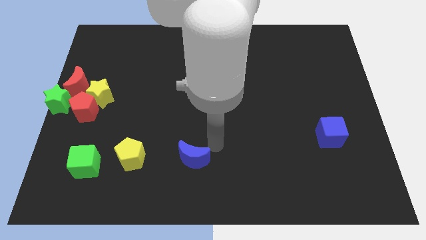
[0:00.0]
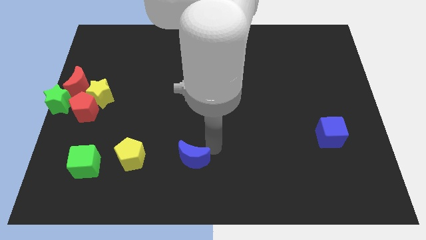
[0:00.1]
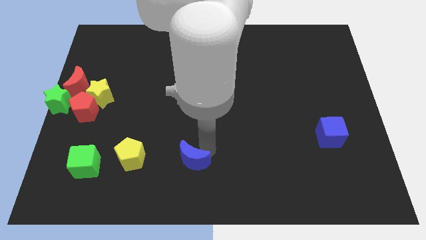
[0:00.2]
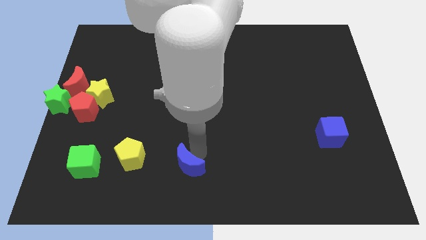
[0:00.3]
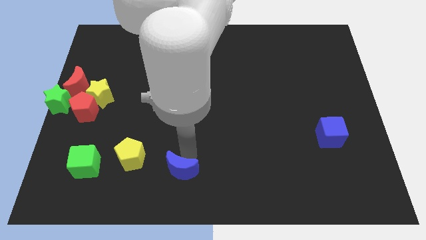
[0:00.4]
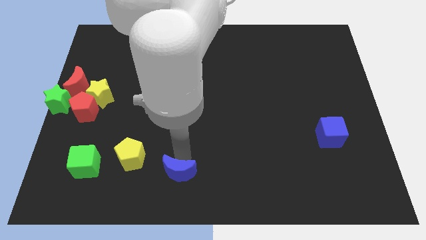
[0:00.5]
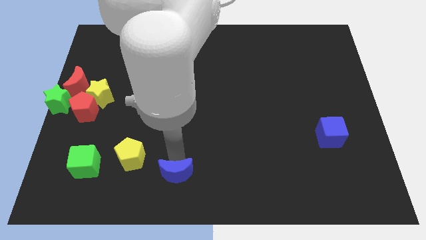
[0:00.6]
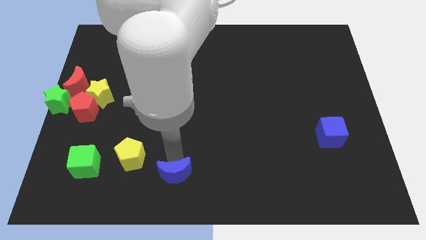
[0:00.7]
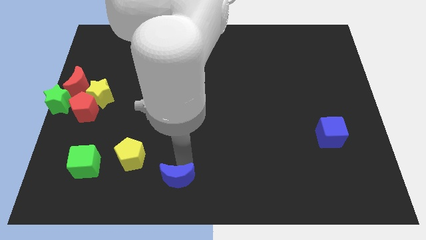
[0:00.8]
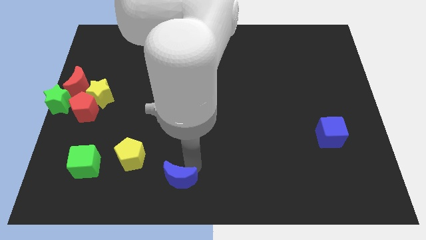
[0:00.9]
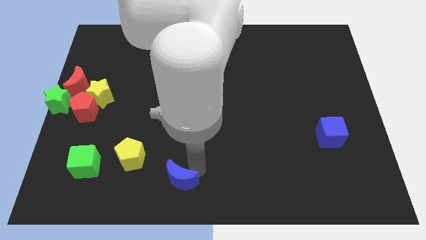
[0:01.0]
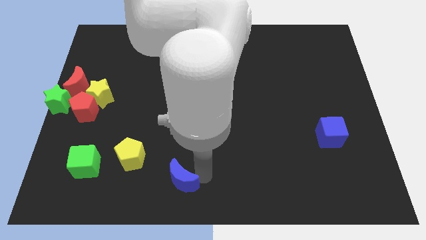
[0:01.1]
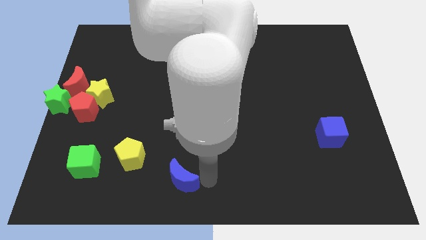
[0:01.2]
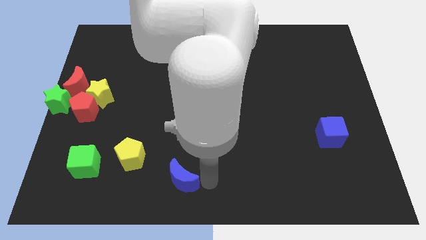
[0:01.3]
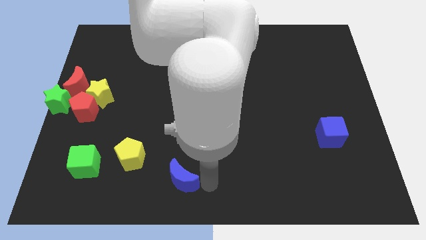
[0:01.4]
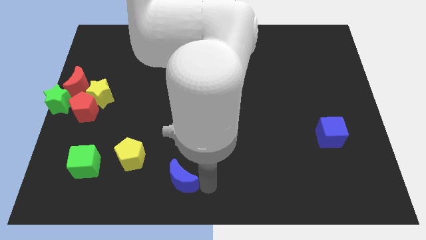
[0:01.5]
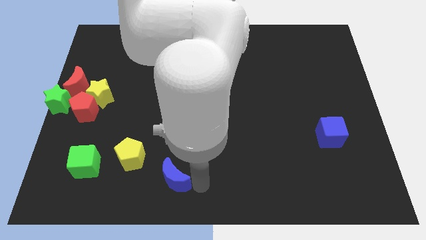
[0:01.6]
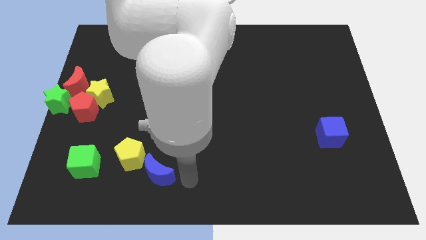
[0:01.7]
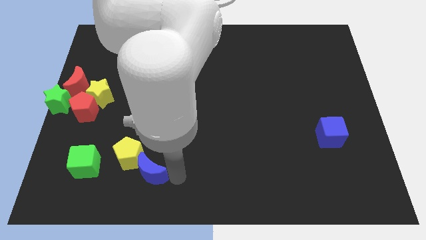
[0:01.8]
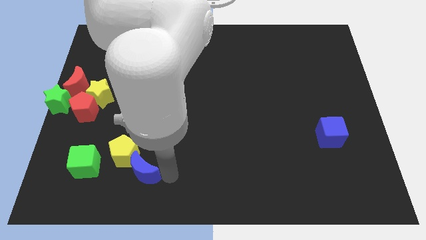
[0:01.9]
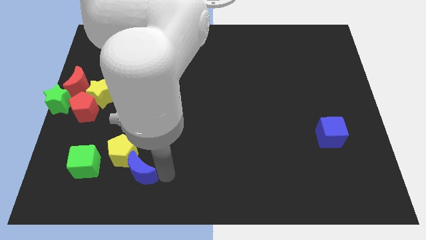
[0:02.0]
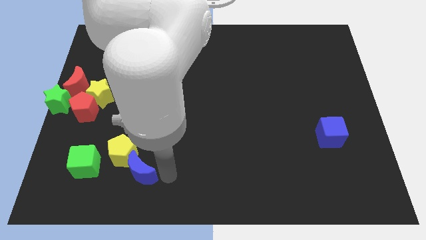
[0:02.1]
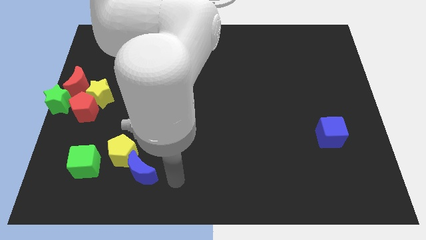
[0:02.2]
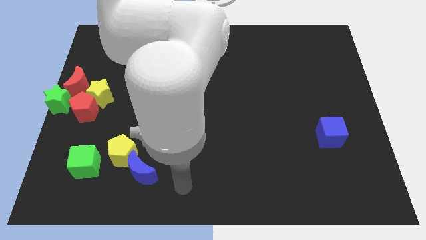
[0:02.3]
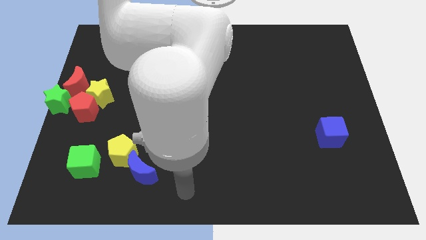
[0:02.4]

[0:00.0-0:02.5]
push the blue crescent into yellow pentagon

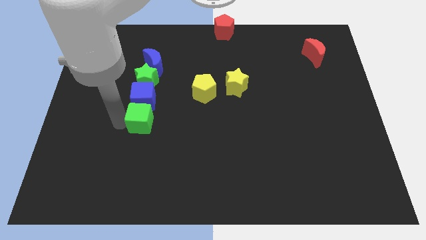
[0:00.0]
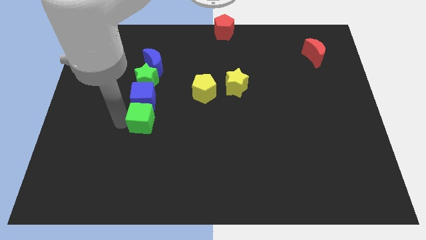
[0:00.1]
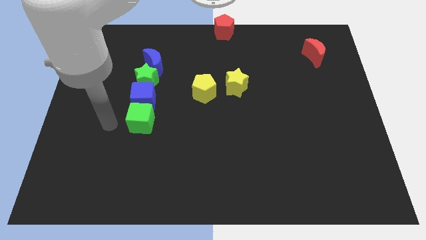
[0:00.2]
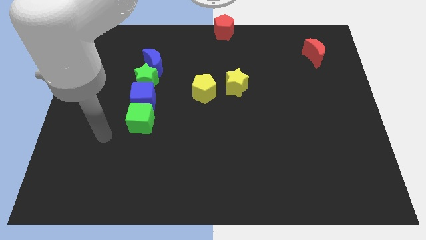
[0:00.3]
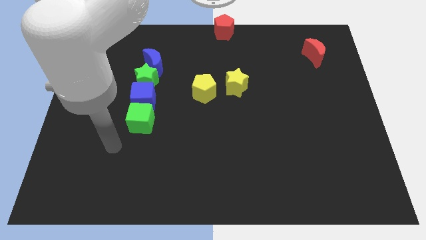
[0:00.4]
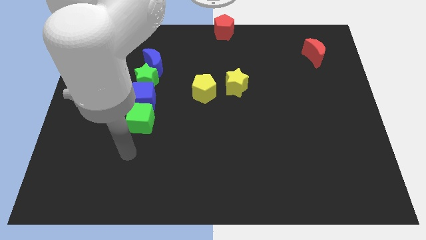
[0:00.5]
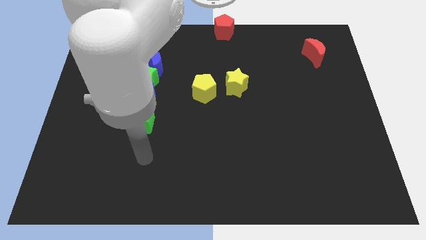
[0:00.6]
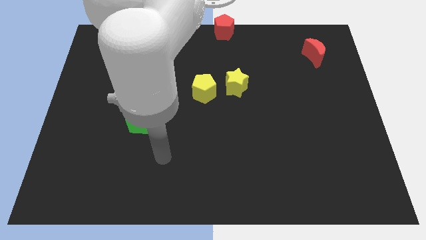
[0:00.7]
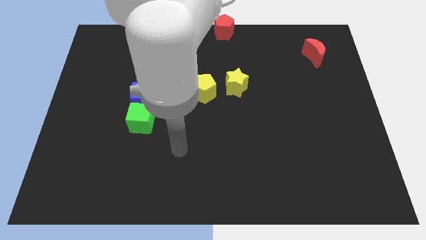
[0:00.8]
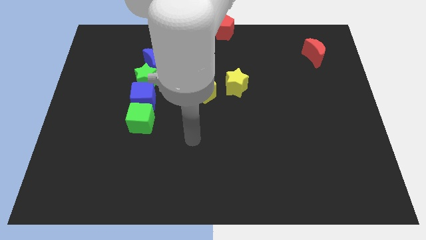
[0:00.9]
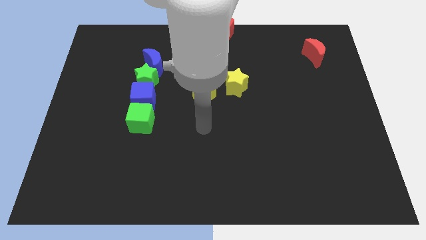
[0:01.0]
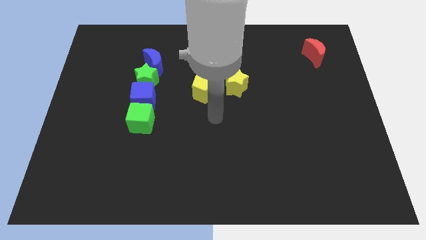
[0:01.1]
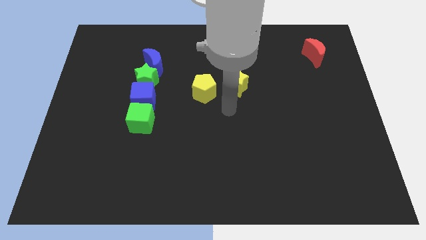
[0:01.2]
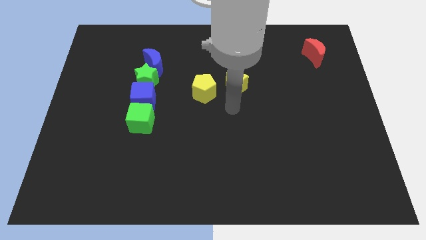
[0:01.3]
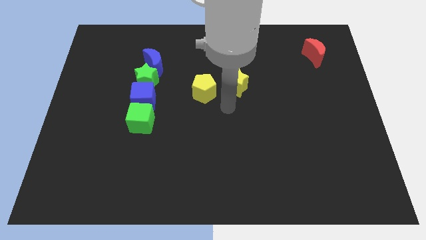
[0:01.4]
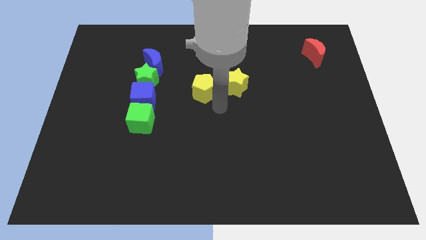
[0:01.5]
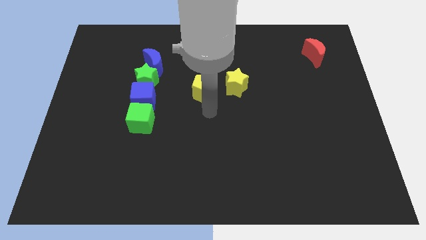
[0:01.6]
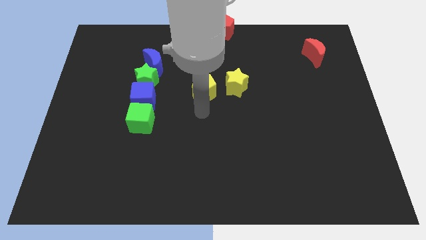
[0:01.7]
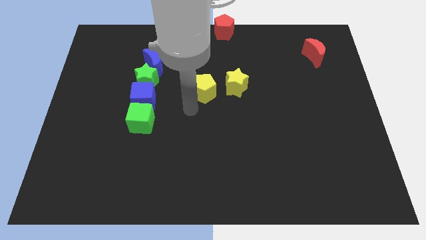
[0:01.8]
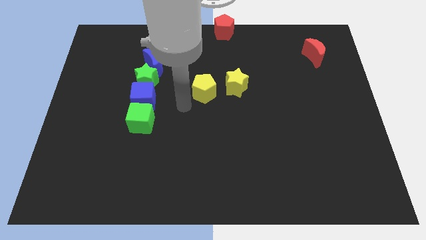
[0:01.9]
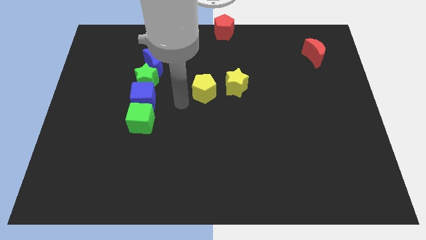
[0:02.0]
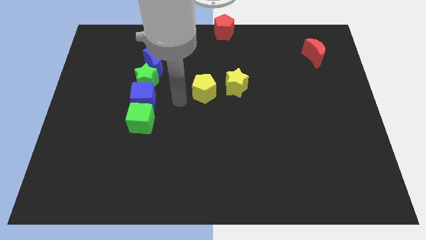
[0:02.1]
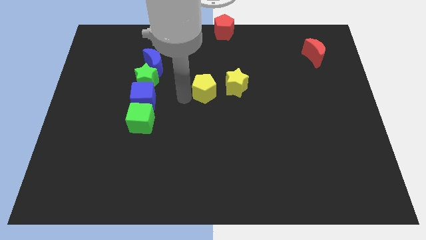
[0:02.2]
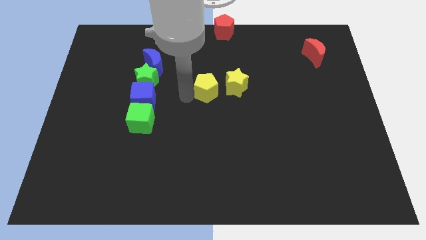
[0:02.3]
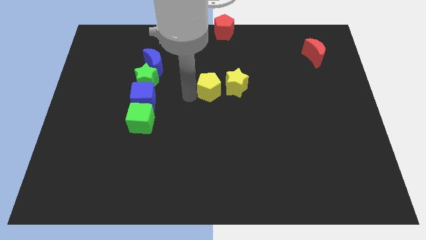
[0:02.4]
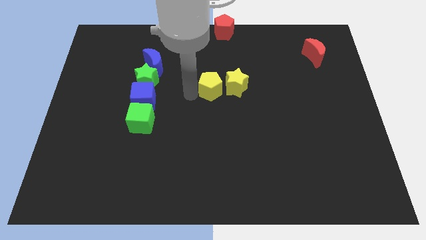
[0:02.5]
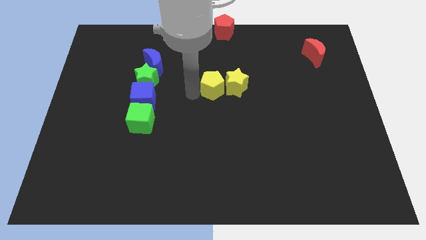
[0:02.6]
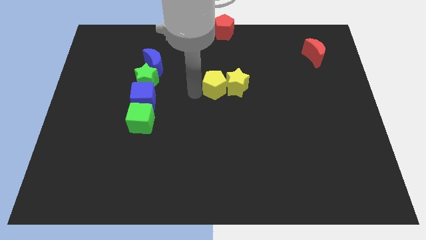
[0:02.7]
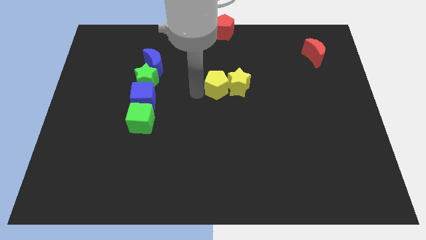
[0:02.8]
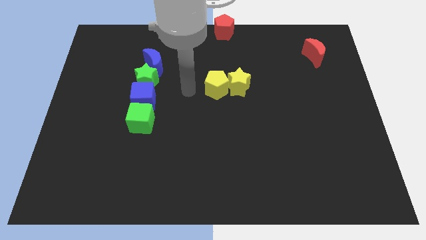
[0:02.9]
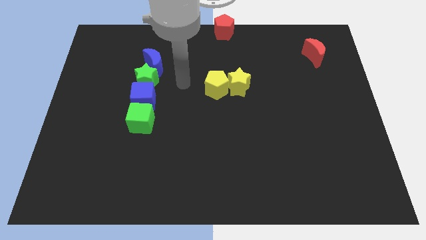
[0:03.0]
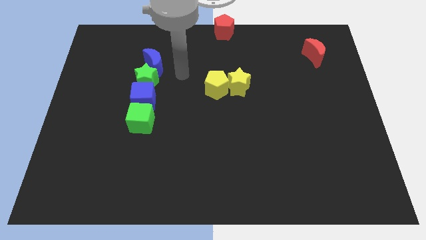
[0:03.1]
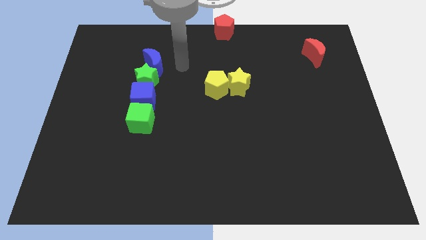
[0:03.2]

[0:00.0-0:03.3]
push the yellow pentagon into the left side of the yellow star

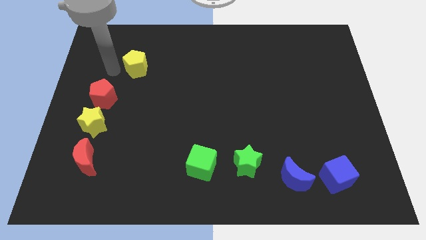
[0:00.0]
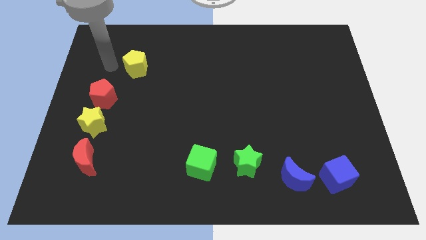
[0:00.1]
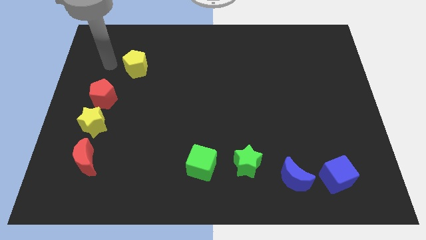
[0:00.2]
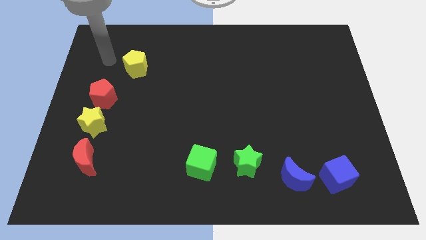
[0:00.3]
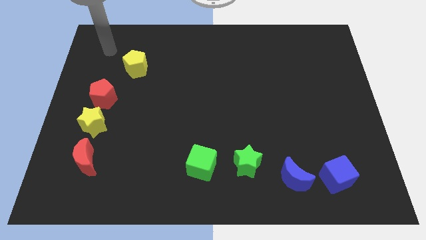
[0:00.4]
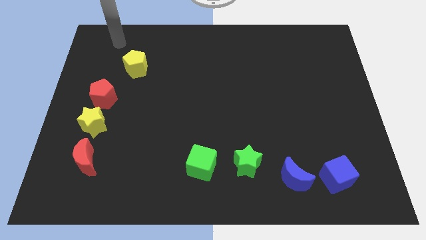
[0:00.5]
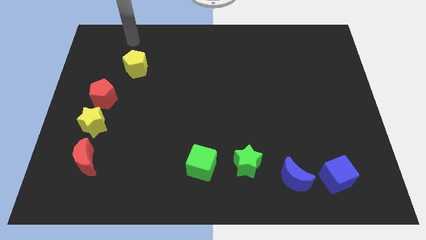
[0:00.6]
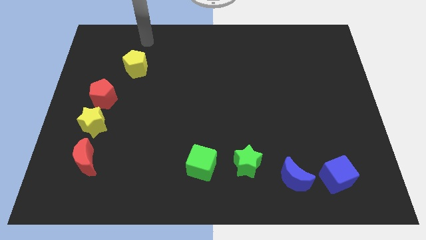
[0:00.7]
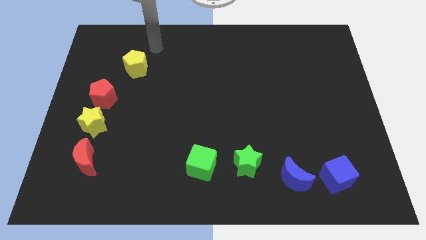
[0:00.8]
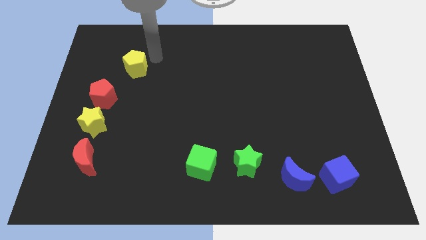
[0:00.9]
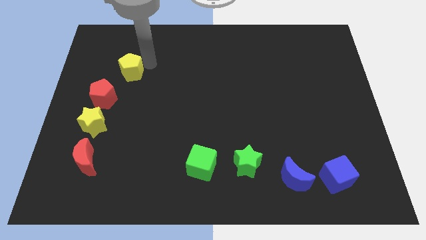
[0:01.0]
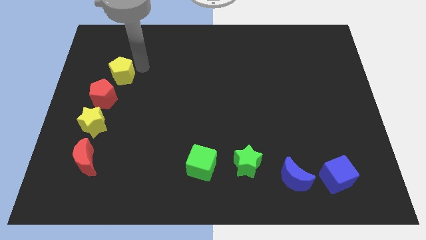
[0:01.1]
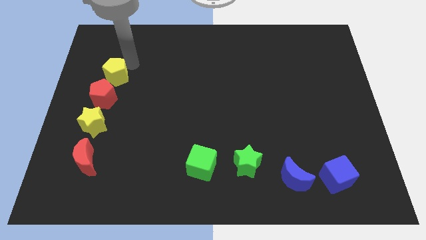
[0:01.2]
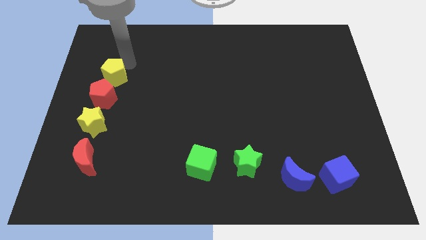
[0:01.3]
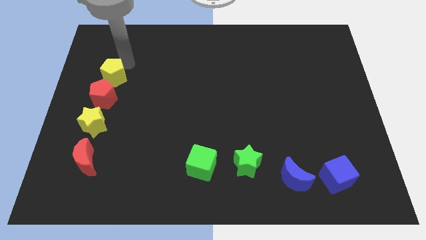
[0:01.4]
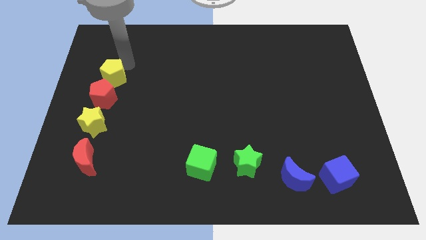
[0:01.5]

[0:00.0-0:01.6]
move the yellow pentagon to the top of the red pentagon

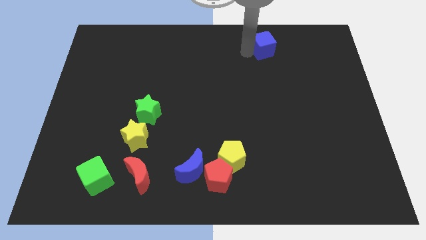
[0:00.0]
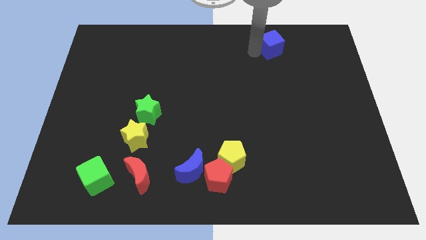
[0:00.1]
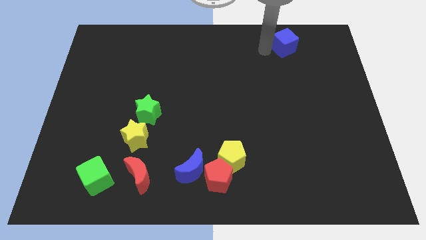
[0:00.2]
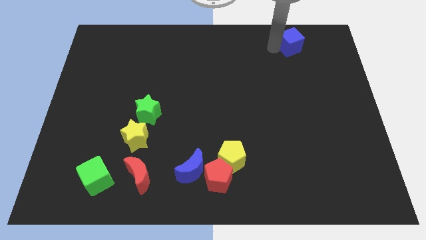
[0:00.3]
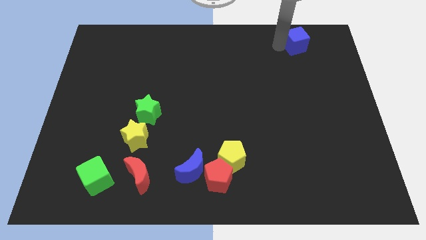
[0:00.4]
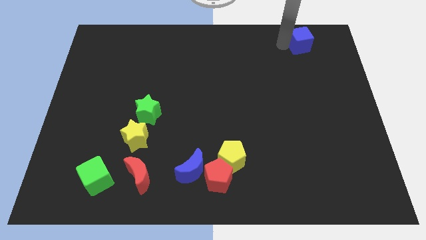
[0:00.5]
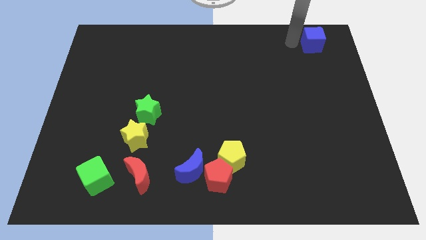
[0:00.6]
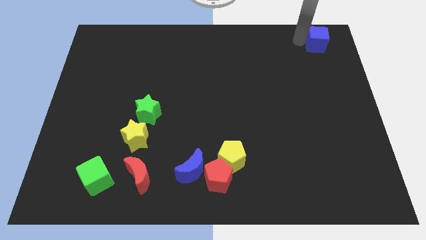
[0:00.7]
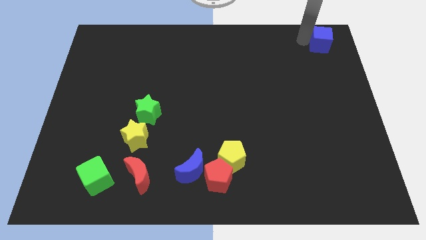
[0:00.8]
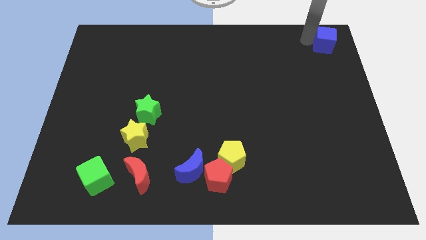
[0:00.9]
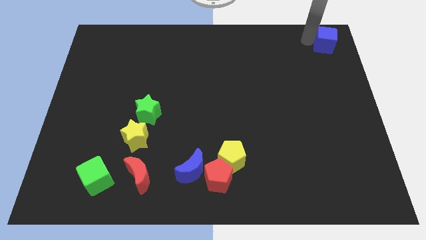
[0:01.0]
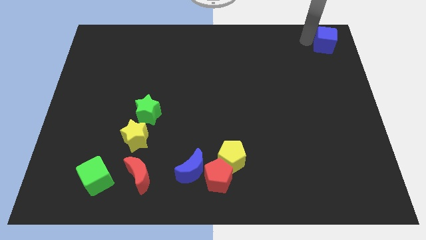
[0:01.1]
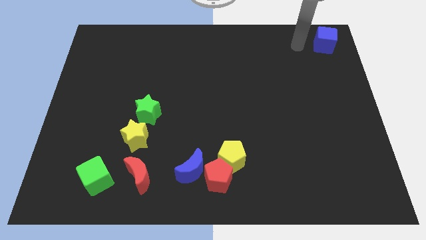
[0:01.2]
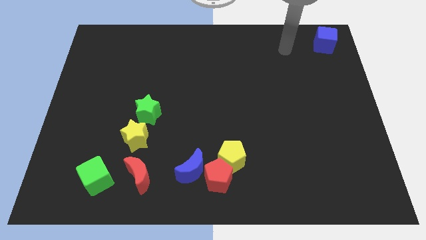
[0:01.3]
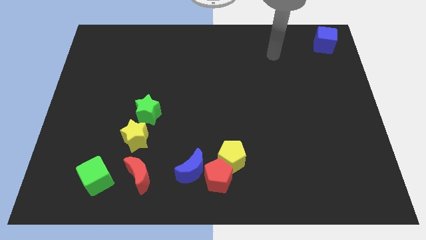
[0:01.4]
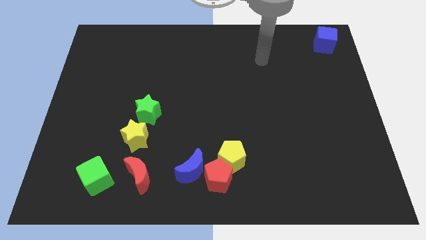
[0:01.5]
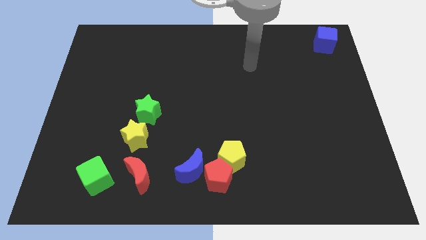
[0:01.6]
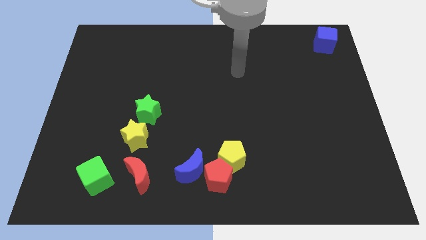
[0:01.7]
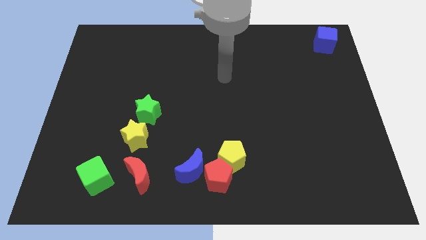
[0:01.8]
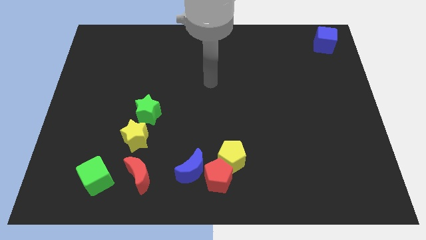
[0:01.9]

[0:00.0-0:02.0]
push the blue cube to the top right corner of the board
